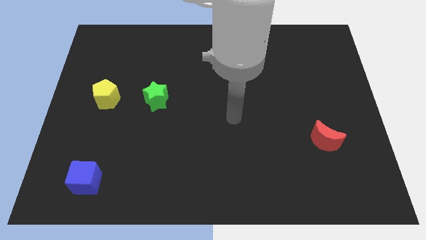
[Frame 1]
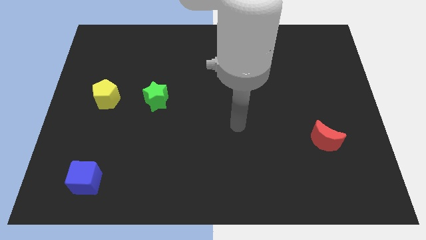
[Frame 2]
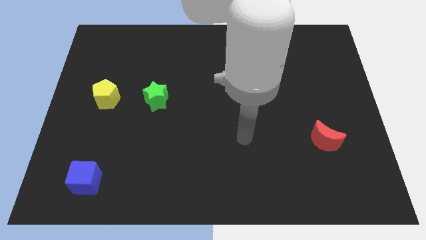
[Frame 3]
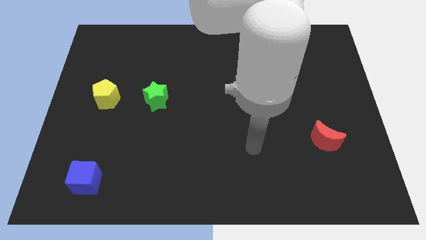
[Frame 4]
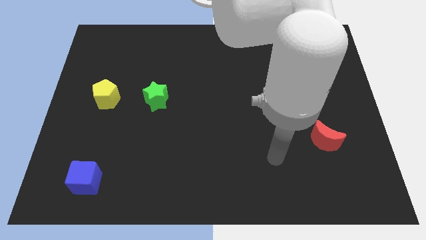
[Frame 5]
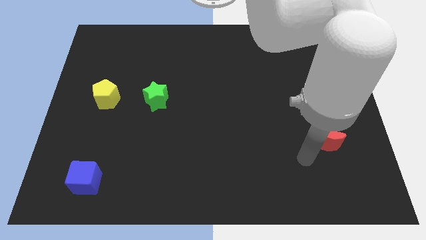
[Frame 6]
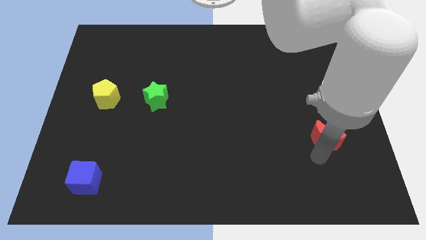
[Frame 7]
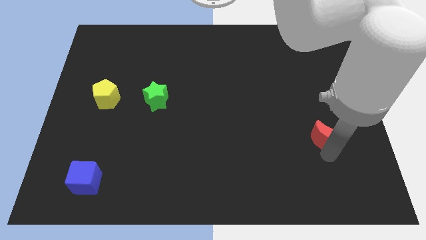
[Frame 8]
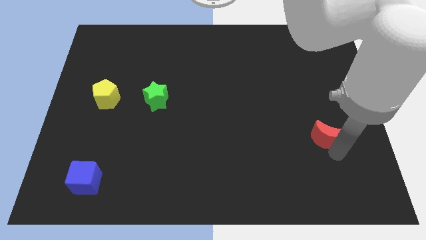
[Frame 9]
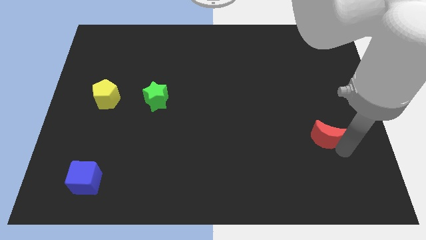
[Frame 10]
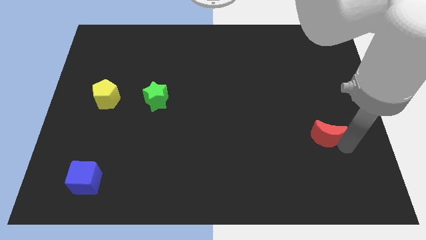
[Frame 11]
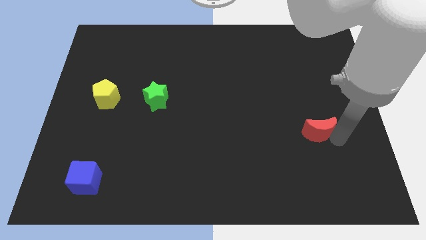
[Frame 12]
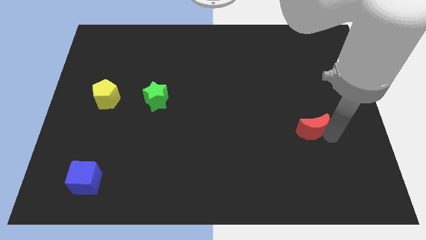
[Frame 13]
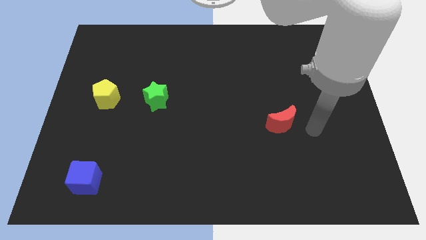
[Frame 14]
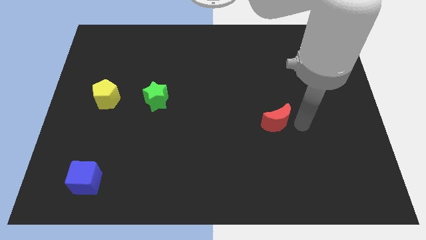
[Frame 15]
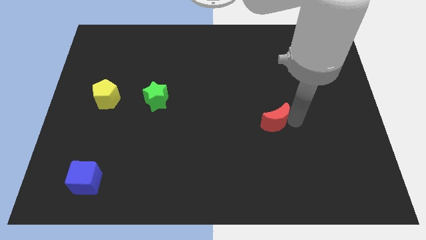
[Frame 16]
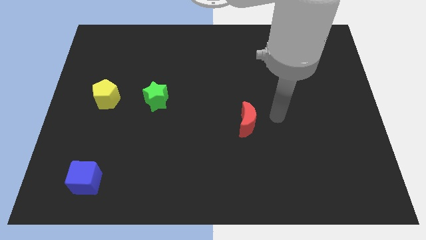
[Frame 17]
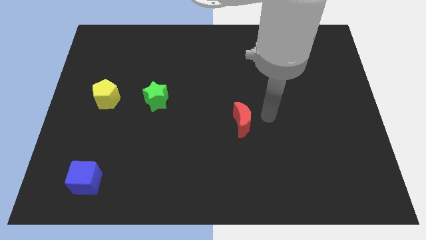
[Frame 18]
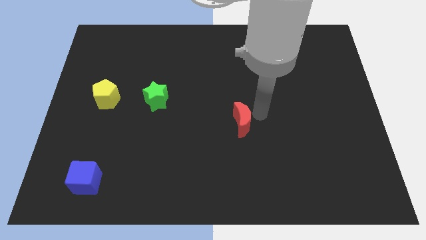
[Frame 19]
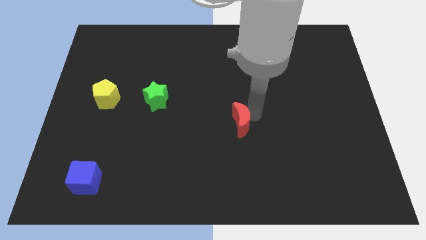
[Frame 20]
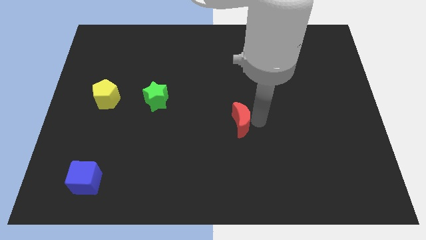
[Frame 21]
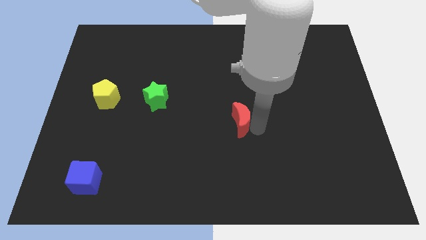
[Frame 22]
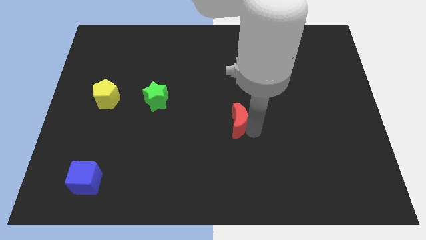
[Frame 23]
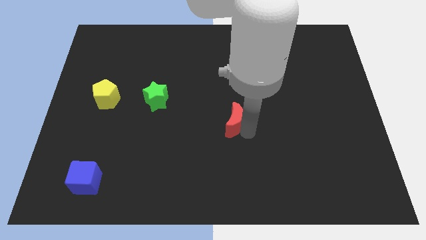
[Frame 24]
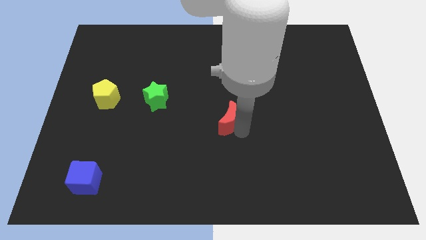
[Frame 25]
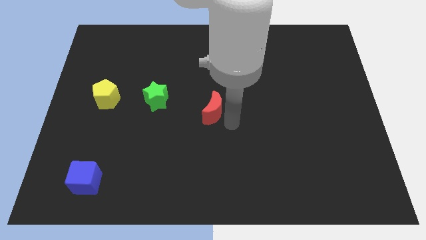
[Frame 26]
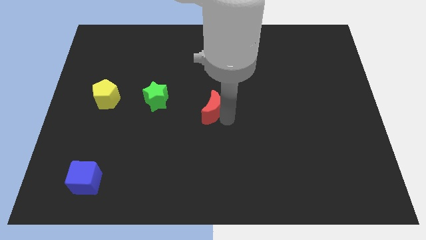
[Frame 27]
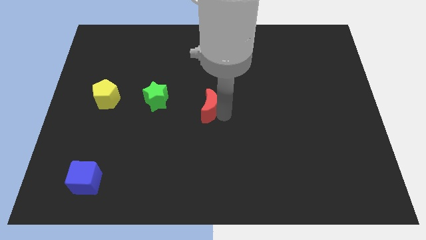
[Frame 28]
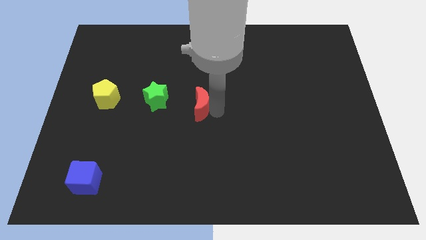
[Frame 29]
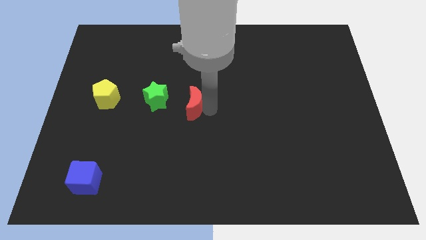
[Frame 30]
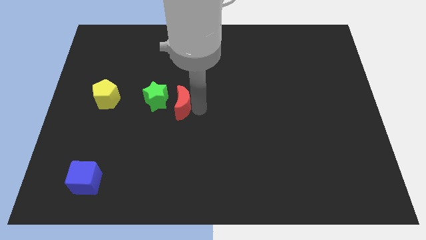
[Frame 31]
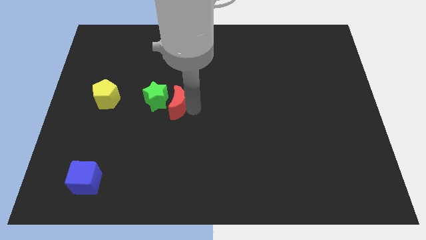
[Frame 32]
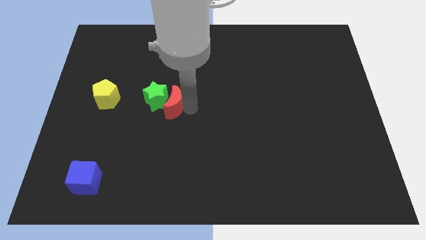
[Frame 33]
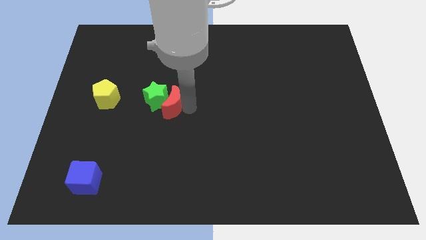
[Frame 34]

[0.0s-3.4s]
put the moon next to the green block

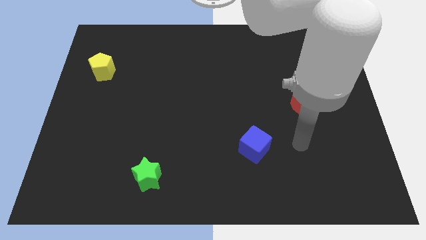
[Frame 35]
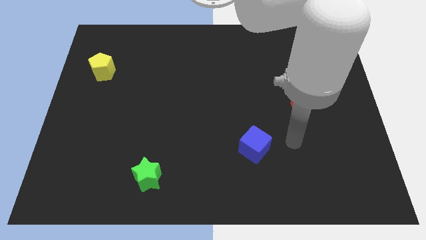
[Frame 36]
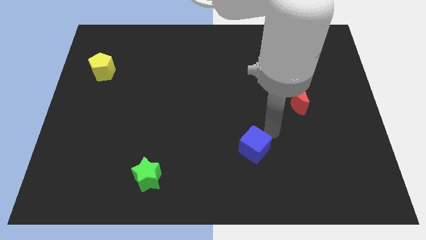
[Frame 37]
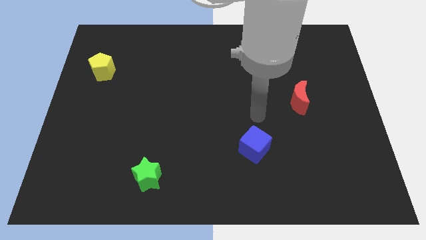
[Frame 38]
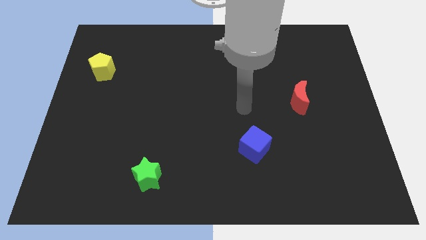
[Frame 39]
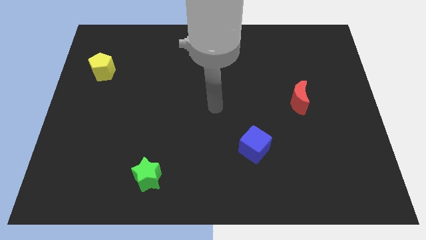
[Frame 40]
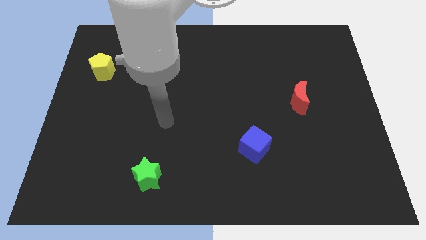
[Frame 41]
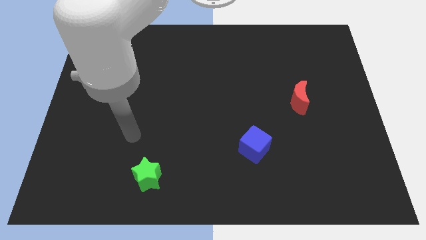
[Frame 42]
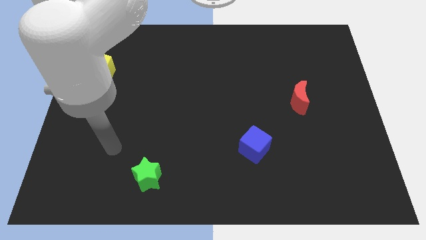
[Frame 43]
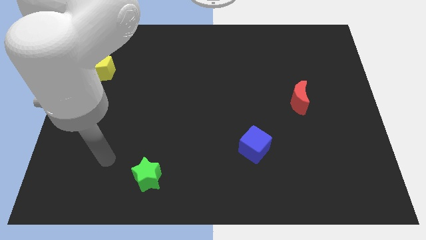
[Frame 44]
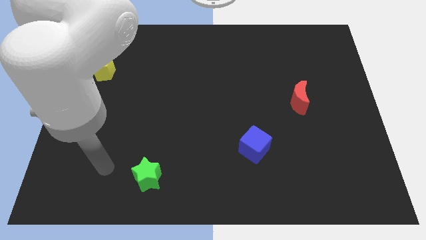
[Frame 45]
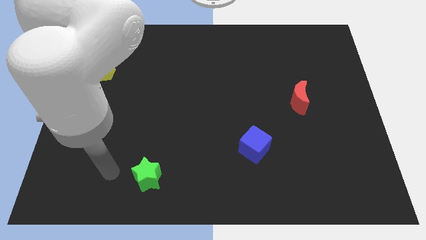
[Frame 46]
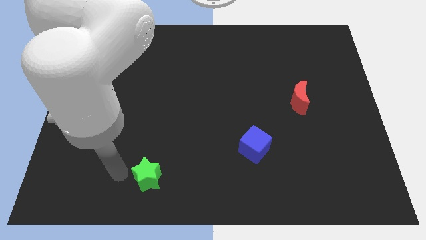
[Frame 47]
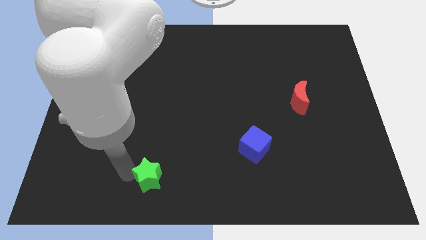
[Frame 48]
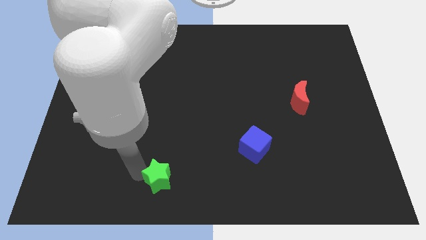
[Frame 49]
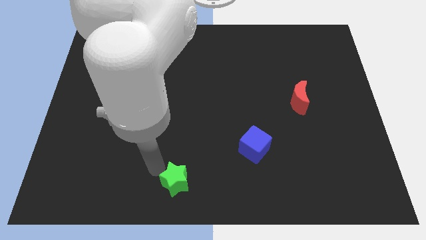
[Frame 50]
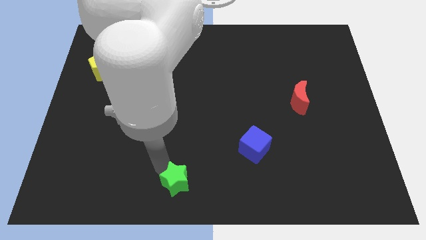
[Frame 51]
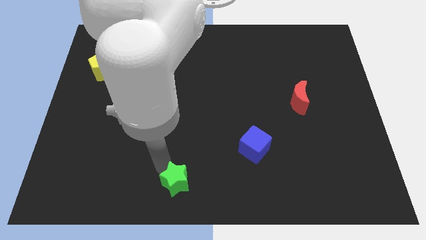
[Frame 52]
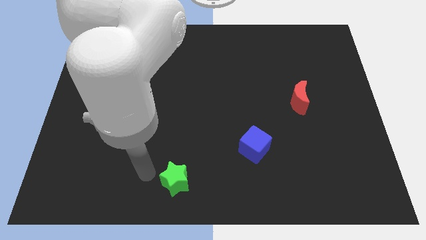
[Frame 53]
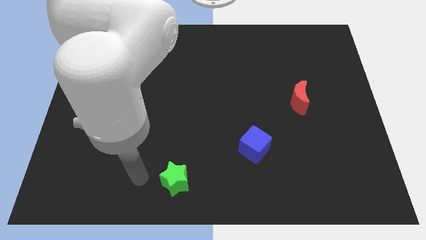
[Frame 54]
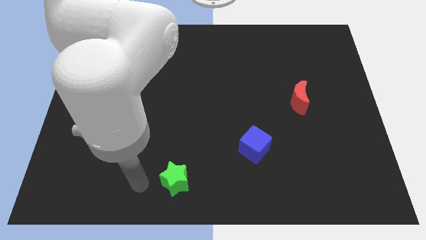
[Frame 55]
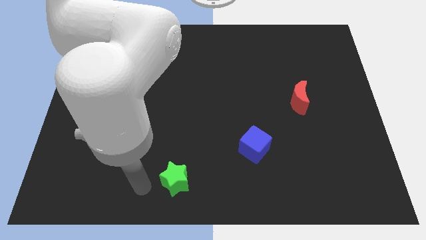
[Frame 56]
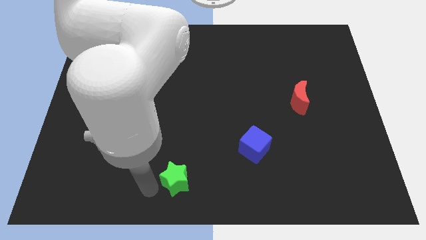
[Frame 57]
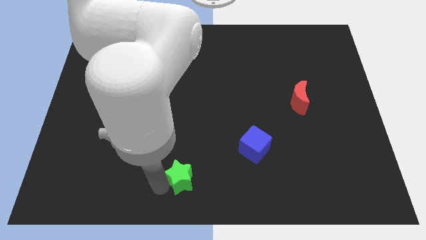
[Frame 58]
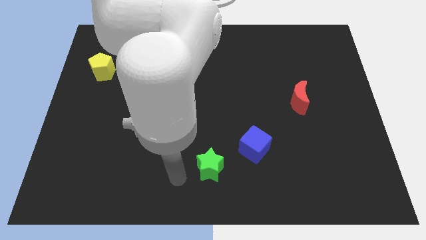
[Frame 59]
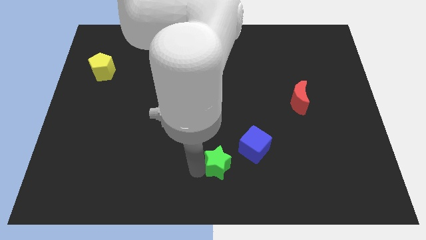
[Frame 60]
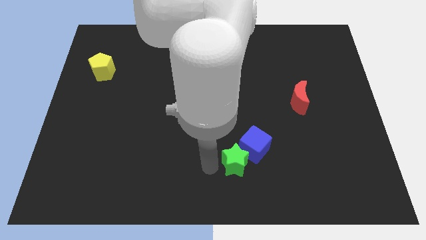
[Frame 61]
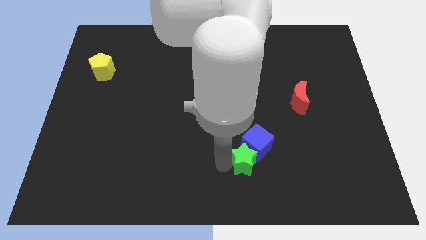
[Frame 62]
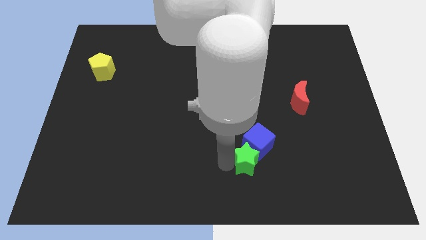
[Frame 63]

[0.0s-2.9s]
put the green star to the cube

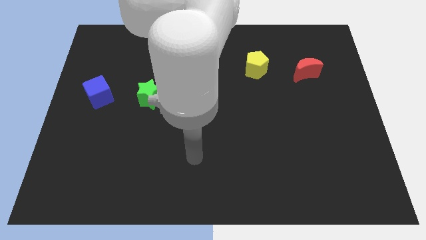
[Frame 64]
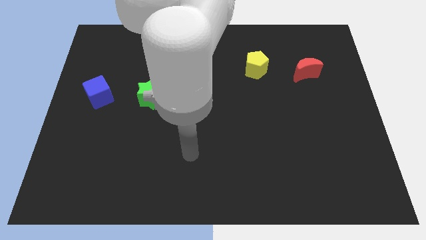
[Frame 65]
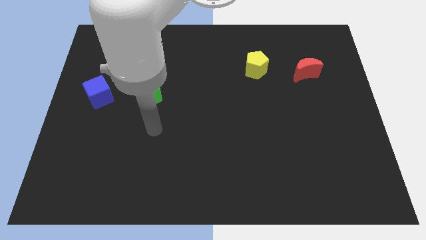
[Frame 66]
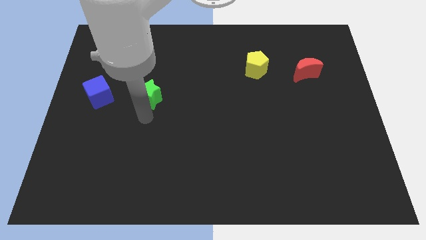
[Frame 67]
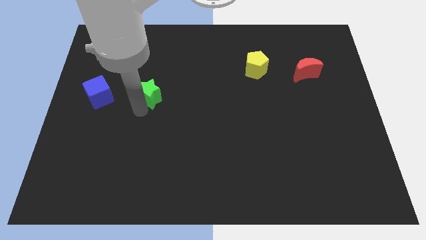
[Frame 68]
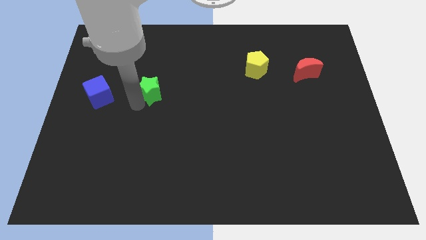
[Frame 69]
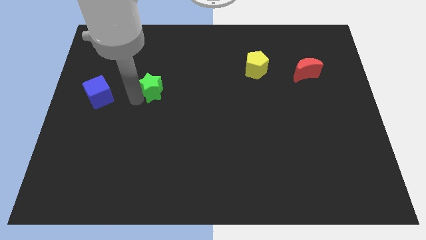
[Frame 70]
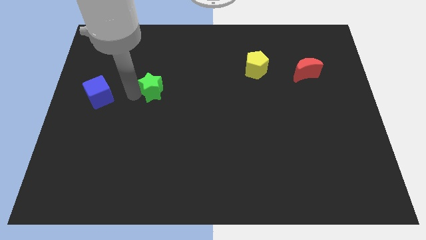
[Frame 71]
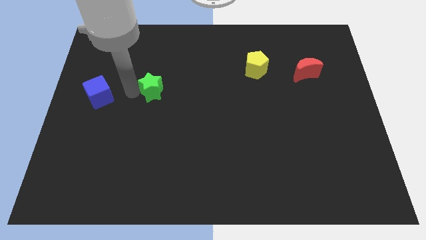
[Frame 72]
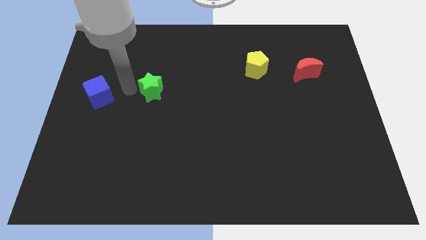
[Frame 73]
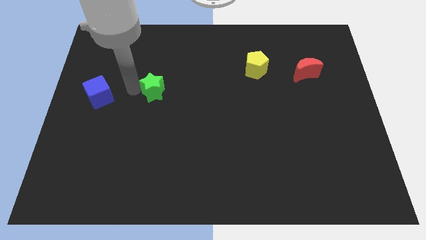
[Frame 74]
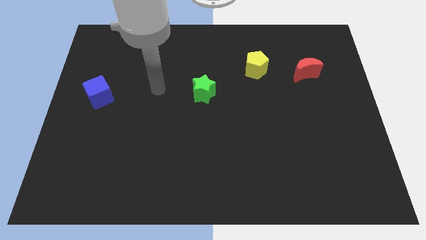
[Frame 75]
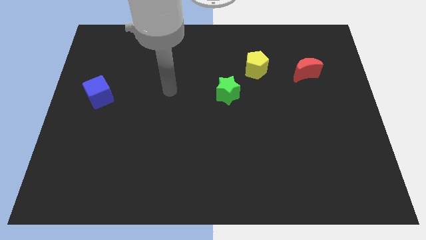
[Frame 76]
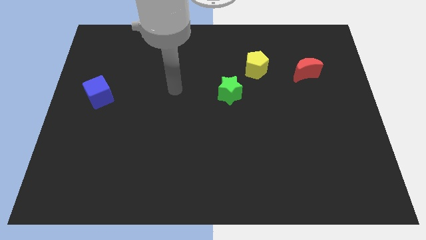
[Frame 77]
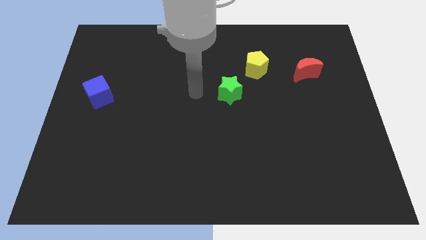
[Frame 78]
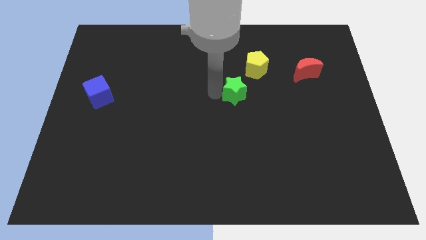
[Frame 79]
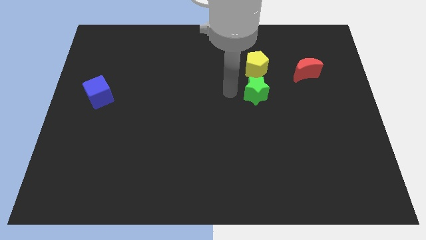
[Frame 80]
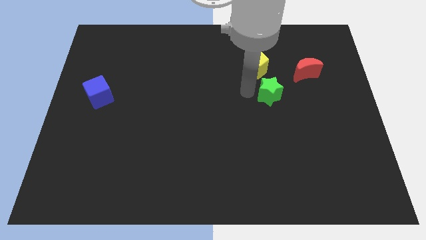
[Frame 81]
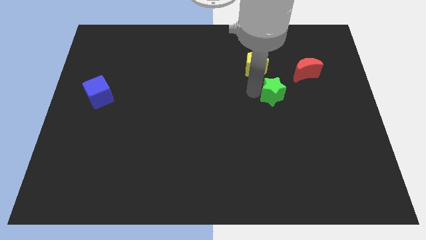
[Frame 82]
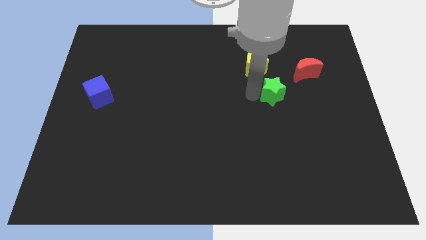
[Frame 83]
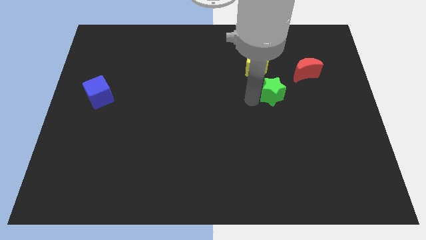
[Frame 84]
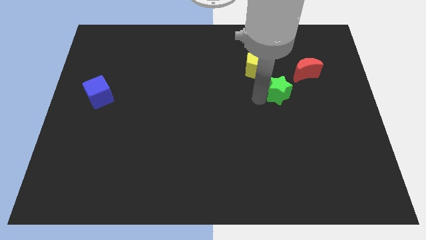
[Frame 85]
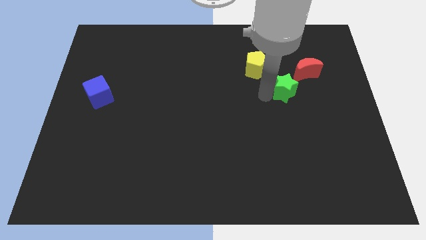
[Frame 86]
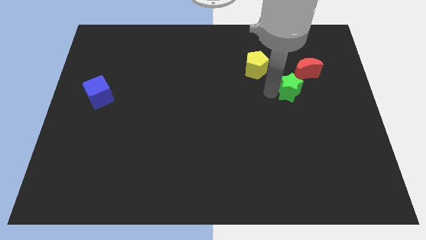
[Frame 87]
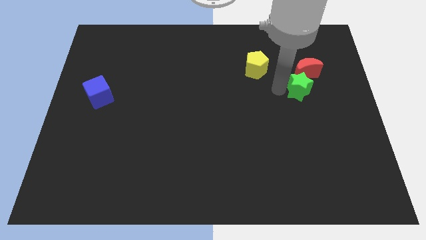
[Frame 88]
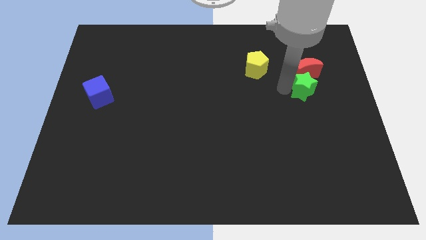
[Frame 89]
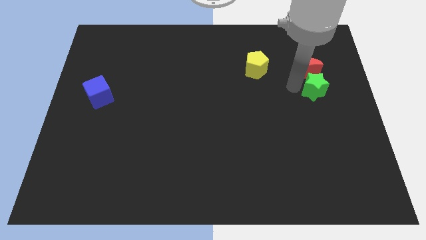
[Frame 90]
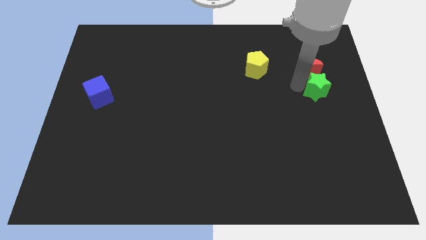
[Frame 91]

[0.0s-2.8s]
move the star to the red moon
